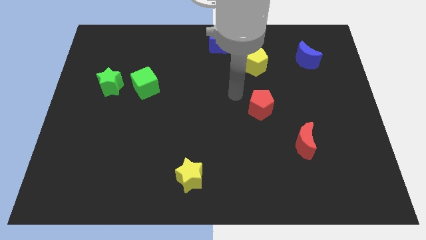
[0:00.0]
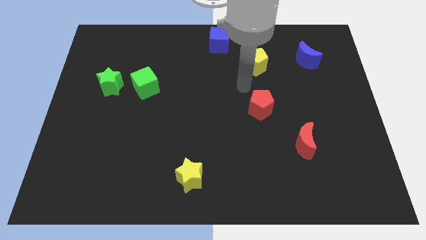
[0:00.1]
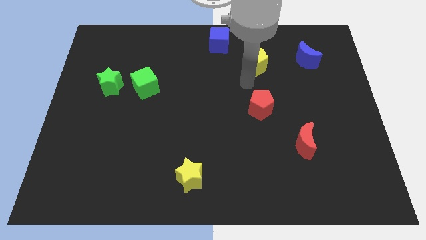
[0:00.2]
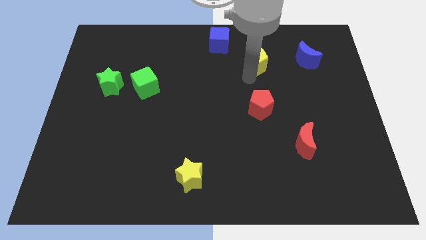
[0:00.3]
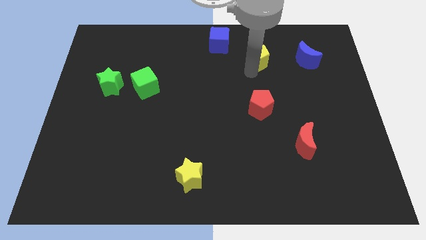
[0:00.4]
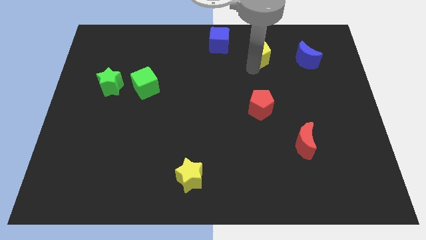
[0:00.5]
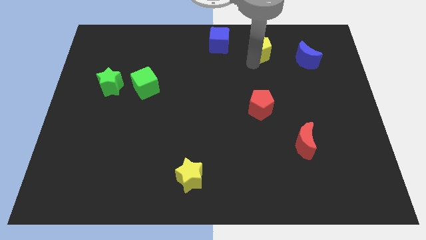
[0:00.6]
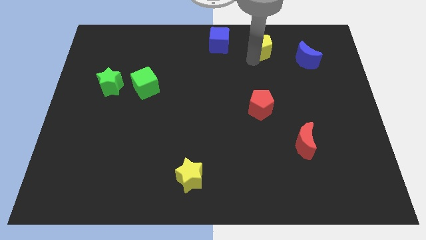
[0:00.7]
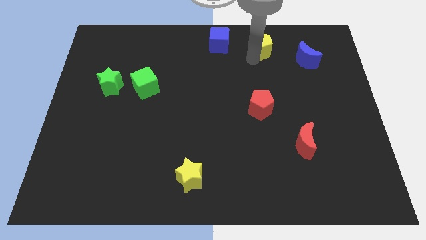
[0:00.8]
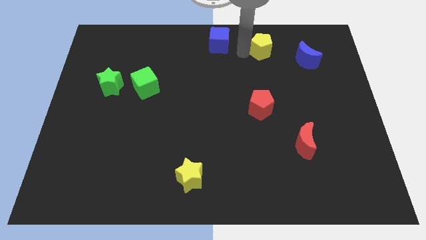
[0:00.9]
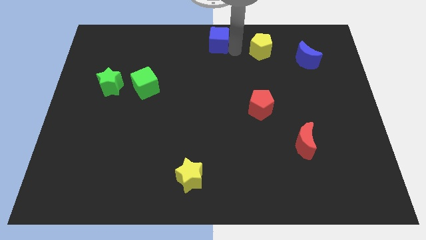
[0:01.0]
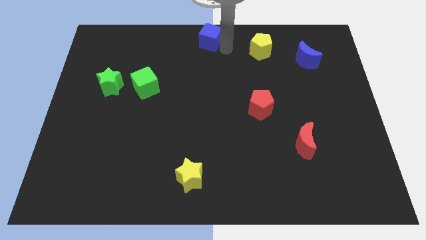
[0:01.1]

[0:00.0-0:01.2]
place yellow pentagon to the right of blue cube

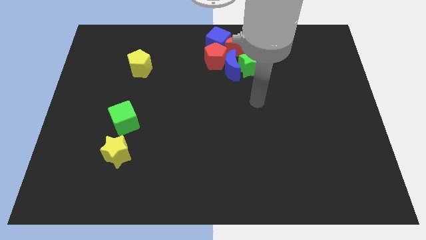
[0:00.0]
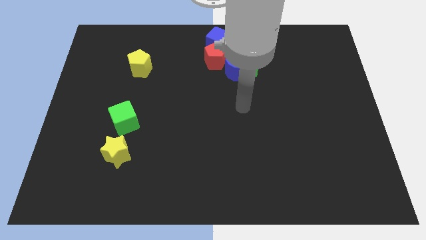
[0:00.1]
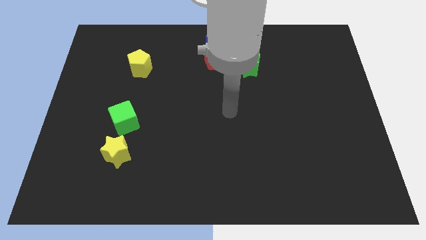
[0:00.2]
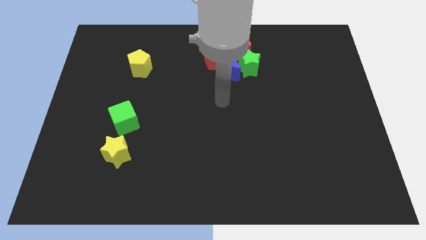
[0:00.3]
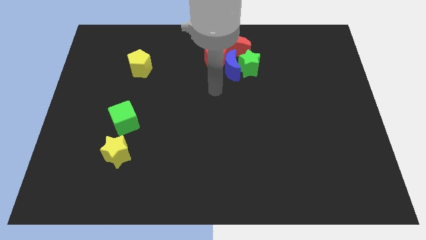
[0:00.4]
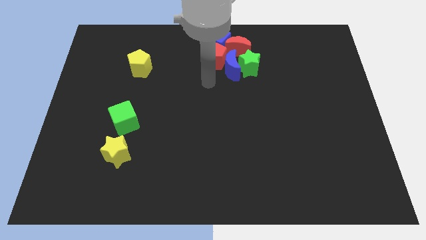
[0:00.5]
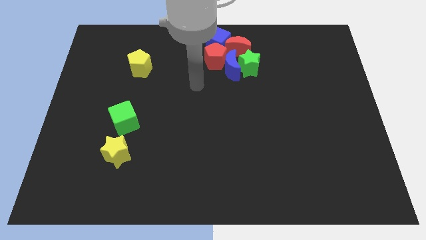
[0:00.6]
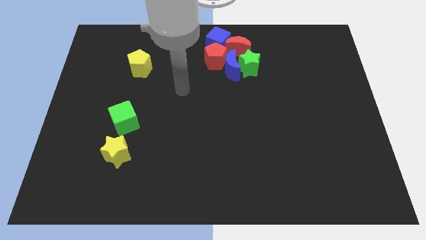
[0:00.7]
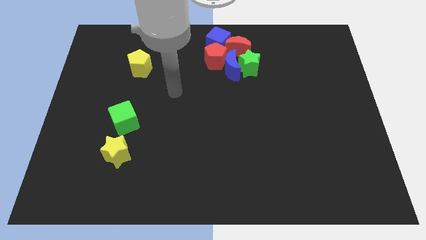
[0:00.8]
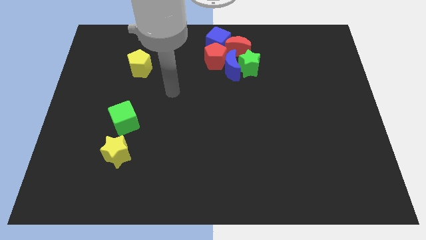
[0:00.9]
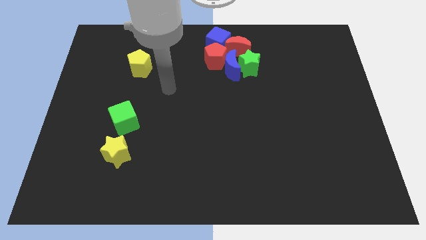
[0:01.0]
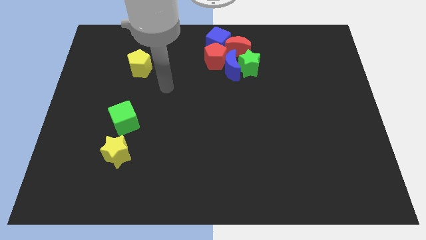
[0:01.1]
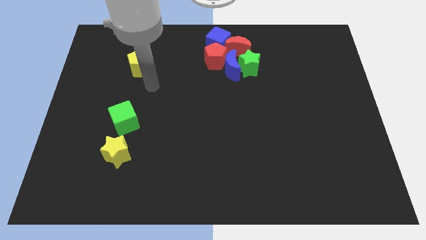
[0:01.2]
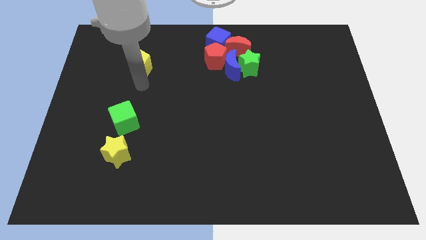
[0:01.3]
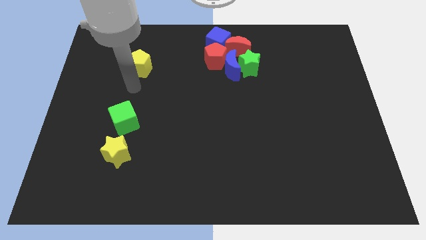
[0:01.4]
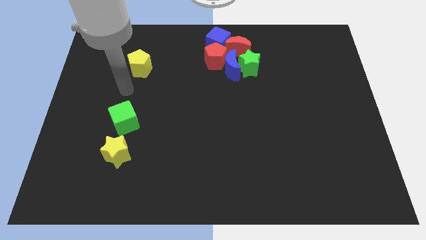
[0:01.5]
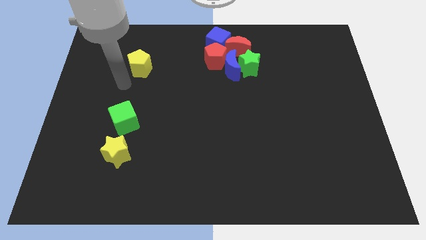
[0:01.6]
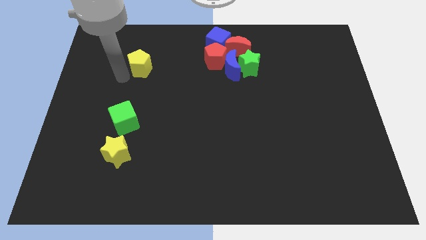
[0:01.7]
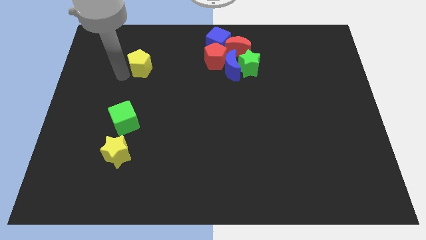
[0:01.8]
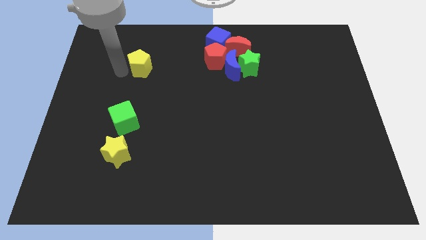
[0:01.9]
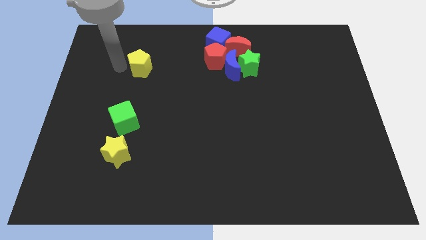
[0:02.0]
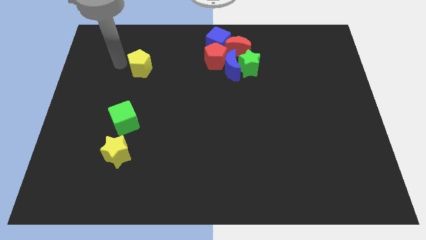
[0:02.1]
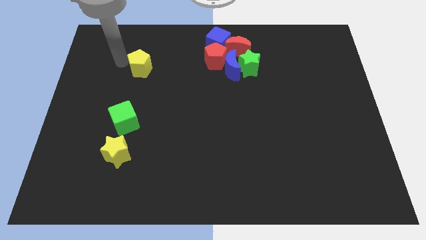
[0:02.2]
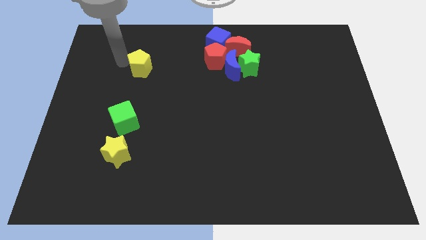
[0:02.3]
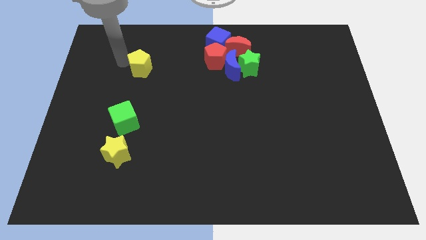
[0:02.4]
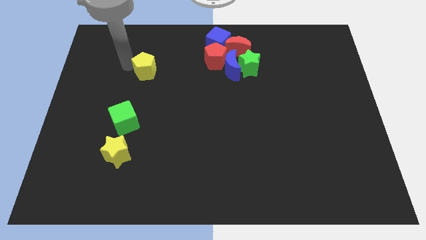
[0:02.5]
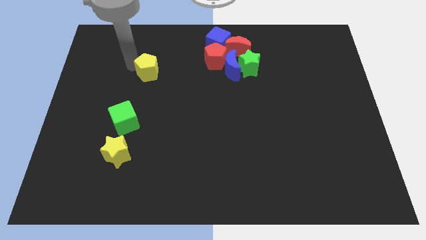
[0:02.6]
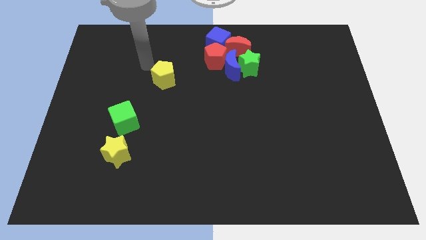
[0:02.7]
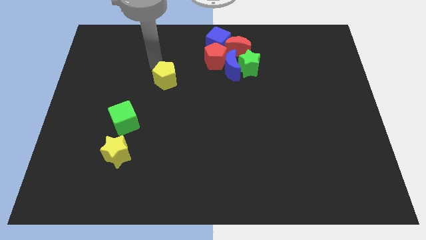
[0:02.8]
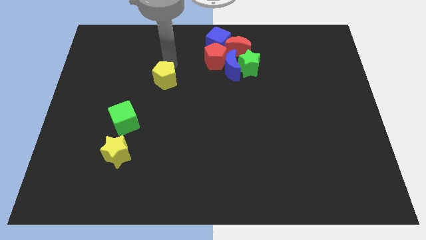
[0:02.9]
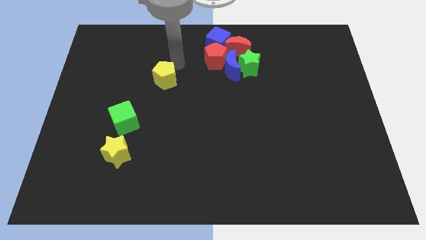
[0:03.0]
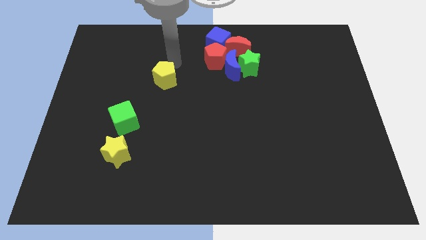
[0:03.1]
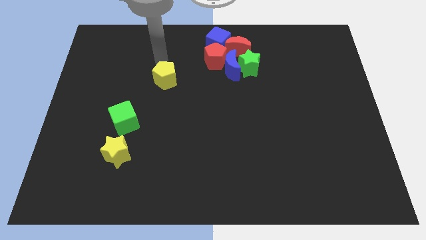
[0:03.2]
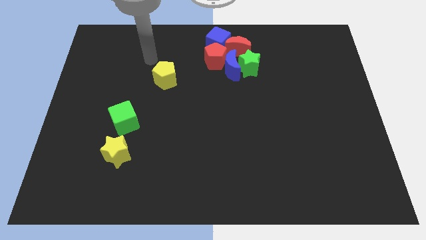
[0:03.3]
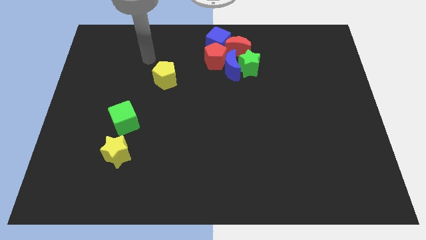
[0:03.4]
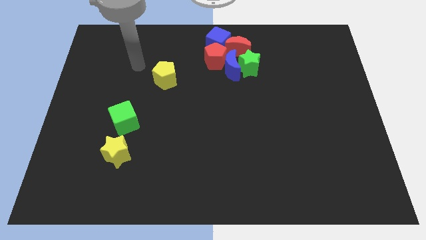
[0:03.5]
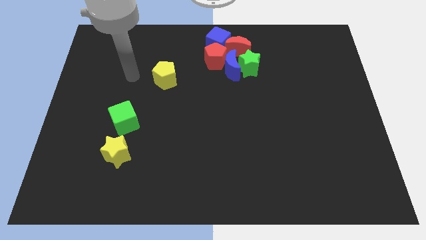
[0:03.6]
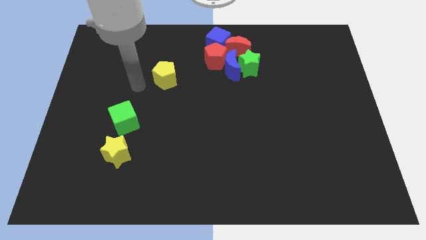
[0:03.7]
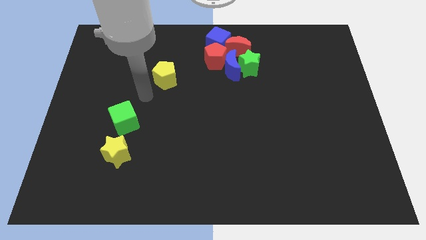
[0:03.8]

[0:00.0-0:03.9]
place the yellow pentagon diagonal to the green cube

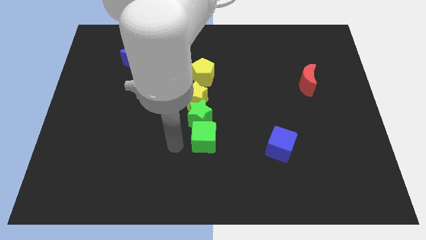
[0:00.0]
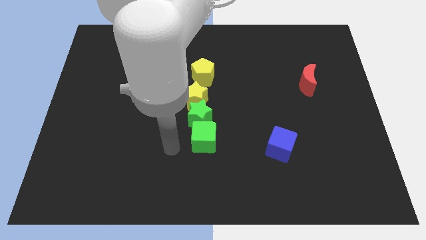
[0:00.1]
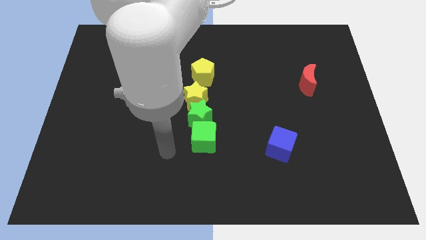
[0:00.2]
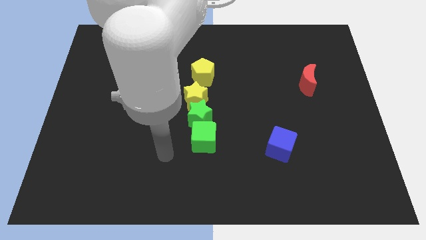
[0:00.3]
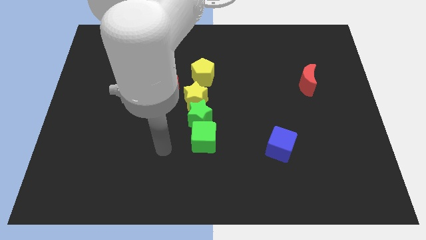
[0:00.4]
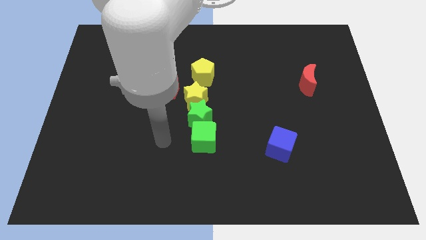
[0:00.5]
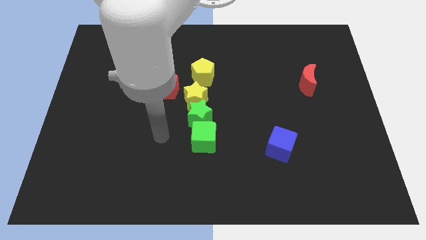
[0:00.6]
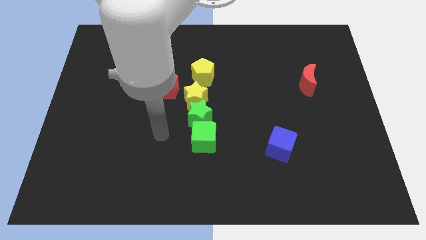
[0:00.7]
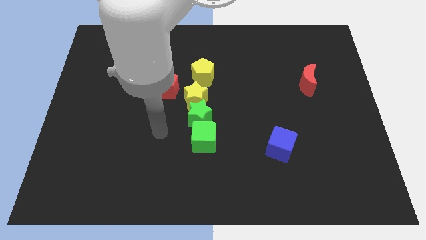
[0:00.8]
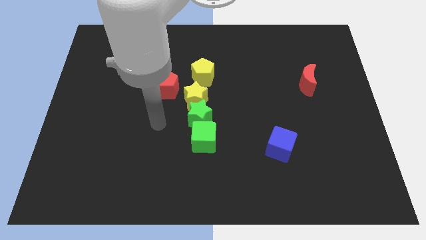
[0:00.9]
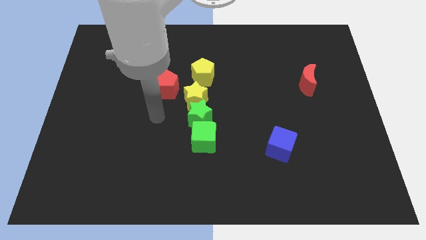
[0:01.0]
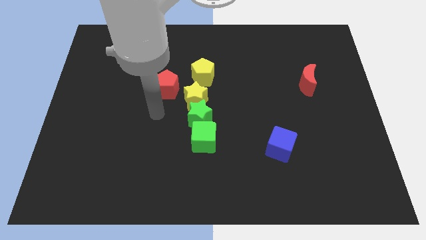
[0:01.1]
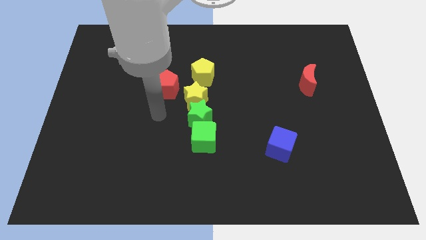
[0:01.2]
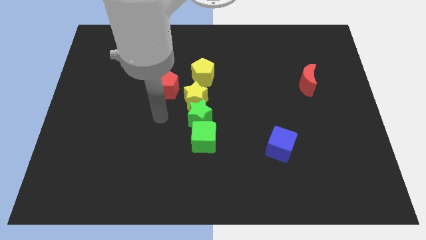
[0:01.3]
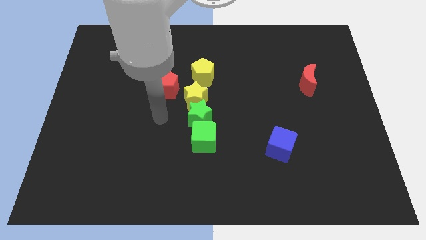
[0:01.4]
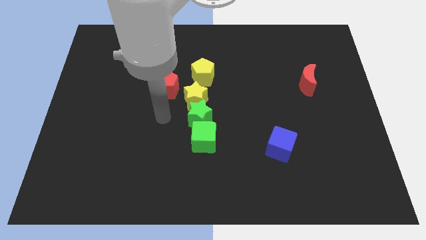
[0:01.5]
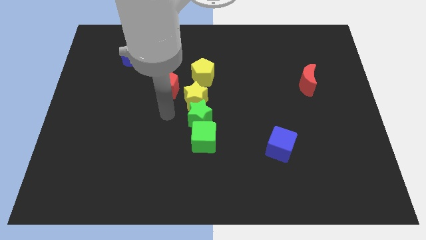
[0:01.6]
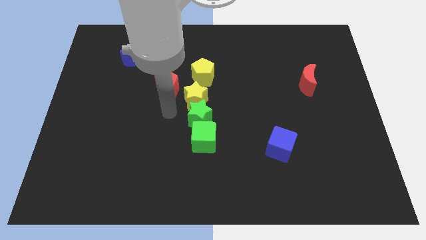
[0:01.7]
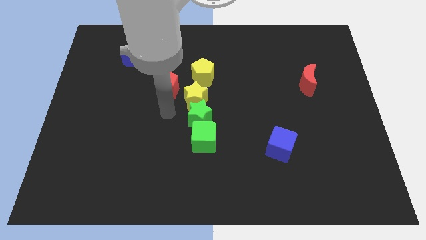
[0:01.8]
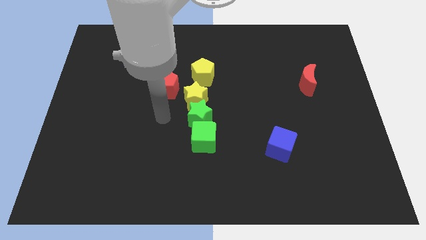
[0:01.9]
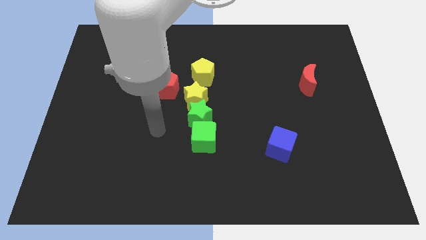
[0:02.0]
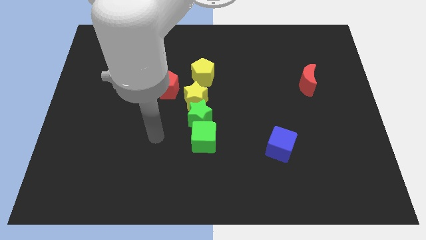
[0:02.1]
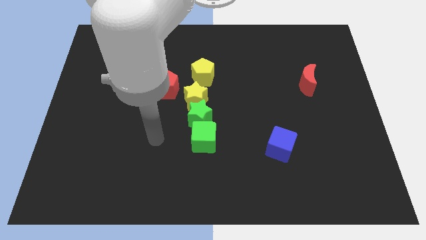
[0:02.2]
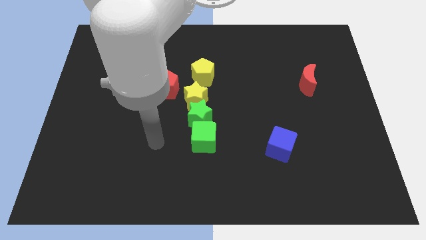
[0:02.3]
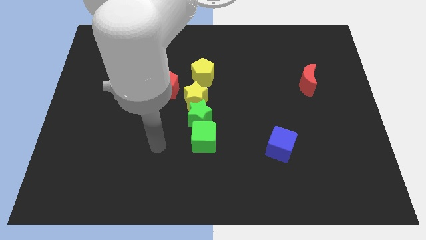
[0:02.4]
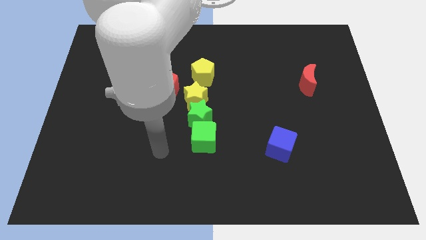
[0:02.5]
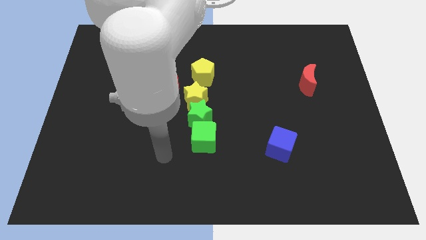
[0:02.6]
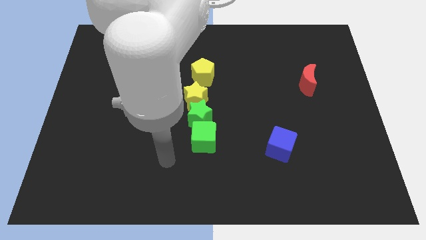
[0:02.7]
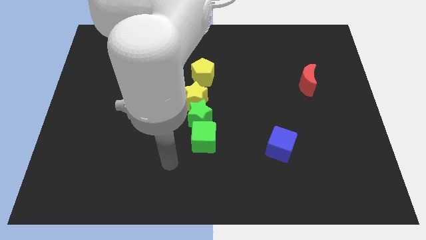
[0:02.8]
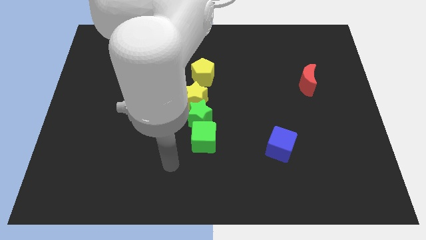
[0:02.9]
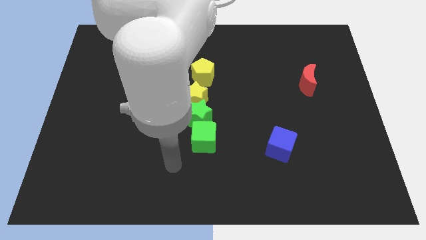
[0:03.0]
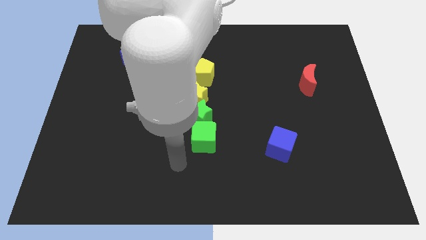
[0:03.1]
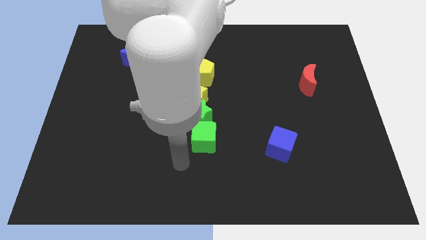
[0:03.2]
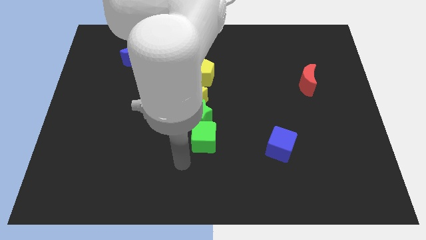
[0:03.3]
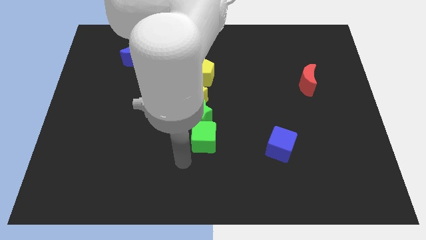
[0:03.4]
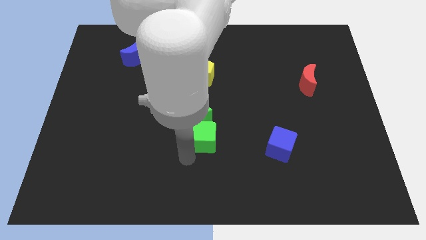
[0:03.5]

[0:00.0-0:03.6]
point your arm at the bottom of the green cube

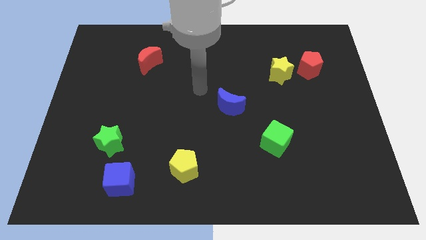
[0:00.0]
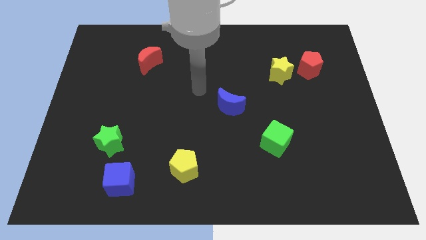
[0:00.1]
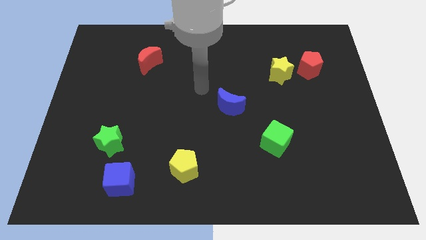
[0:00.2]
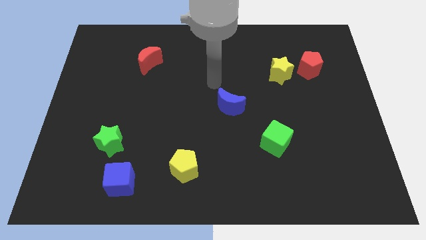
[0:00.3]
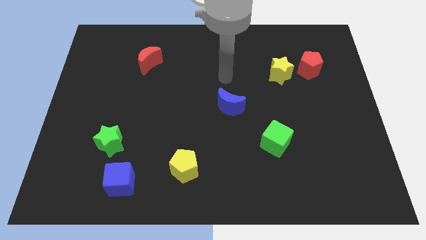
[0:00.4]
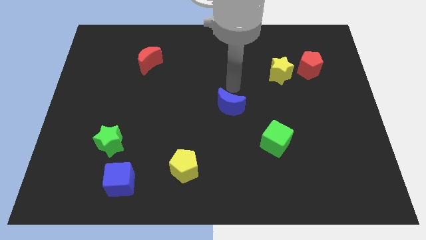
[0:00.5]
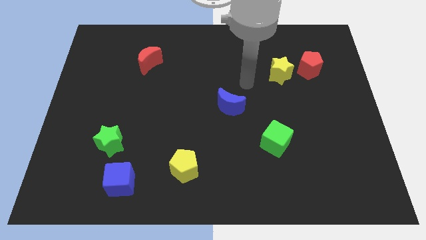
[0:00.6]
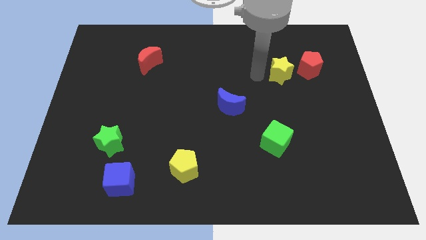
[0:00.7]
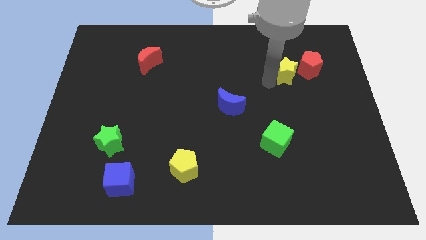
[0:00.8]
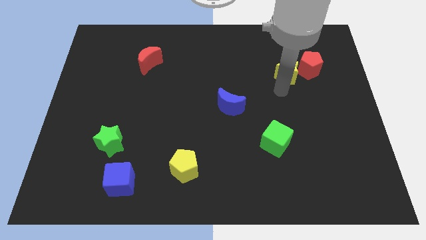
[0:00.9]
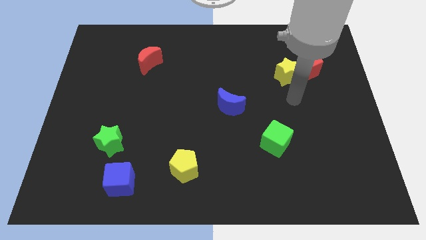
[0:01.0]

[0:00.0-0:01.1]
slide yellow star to the right slightly
